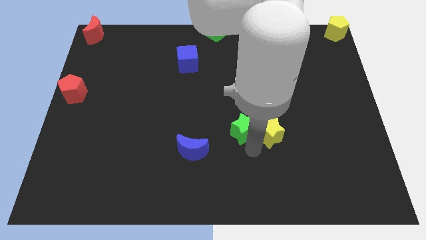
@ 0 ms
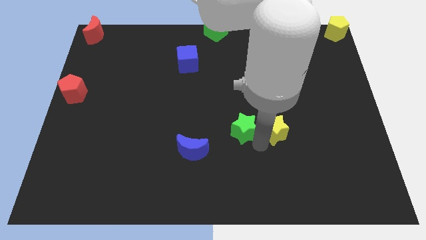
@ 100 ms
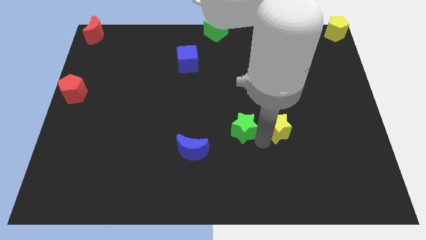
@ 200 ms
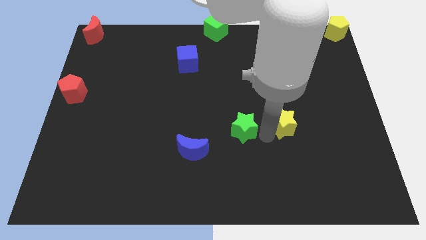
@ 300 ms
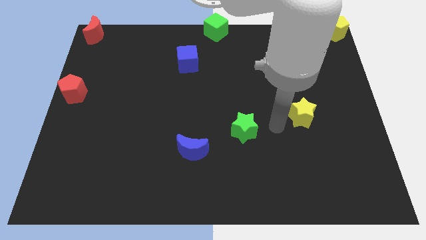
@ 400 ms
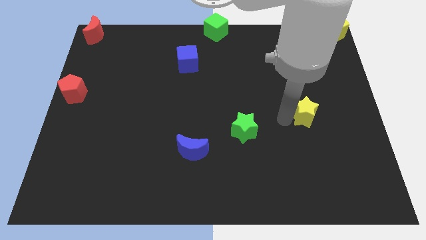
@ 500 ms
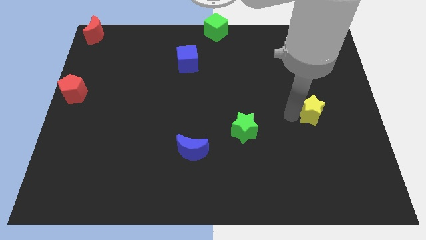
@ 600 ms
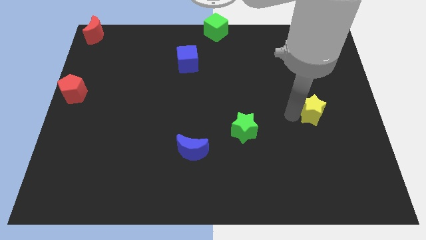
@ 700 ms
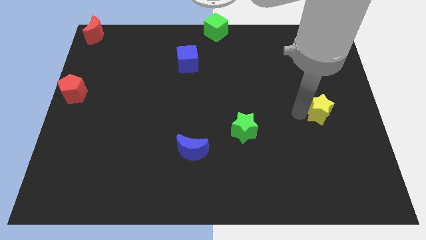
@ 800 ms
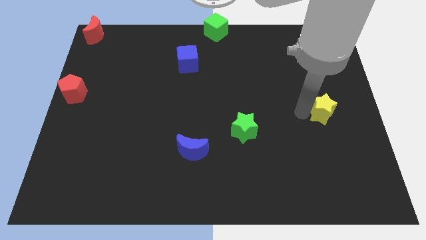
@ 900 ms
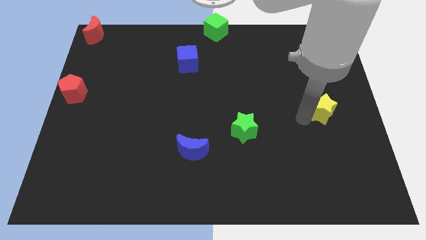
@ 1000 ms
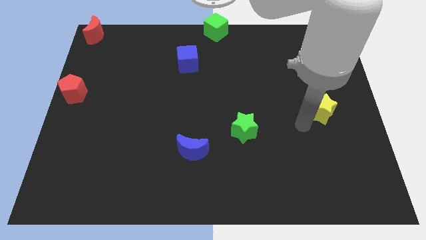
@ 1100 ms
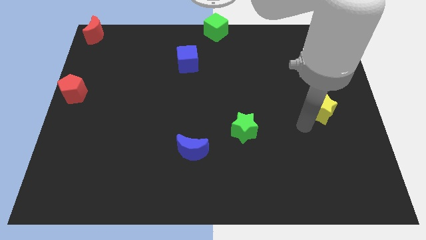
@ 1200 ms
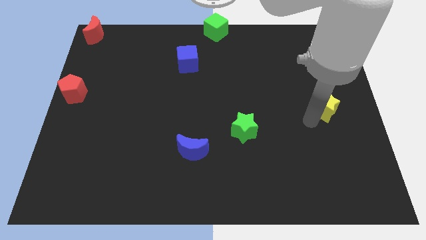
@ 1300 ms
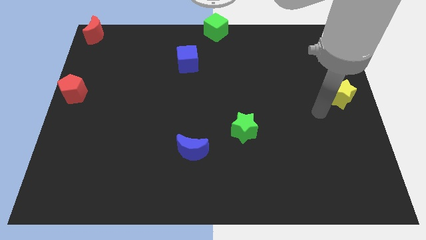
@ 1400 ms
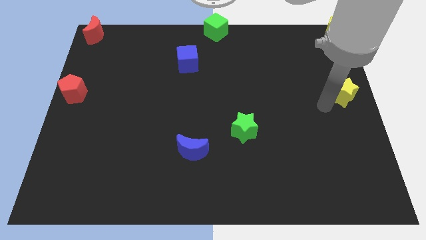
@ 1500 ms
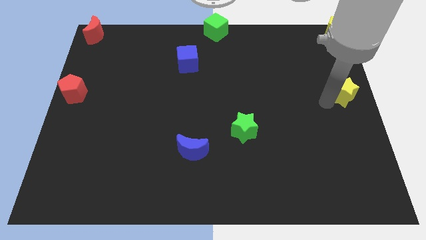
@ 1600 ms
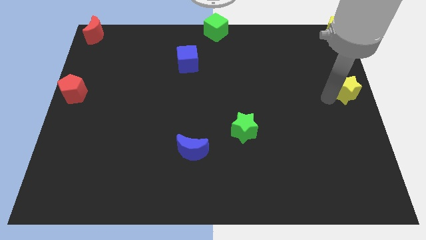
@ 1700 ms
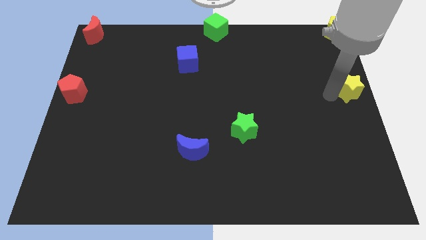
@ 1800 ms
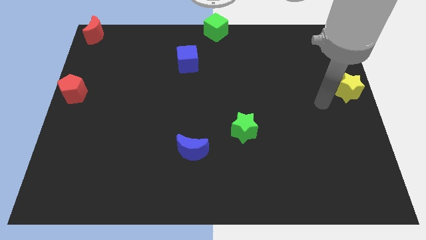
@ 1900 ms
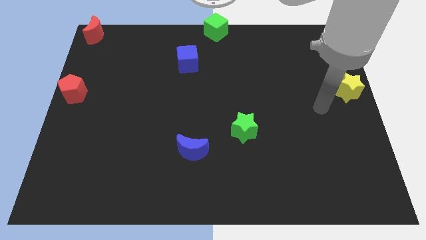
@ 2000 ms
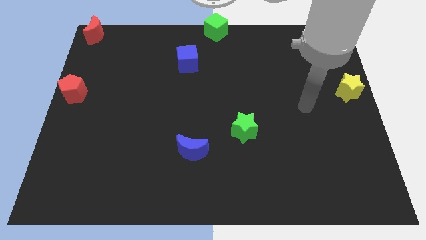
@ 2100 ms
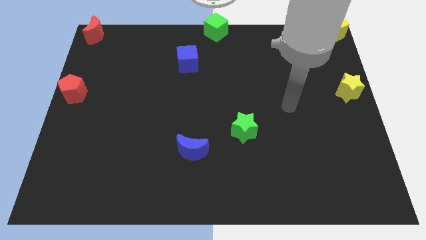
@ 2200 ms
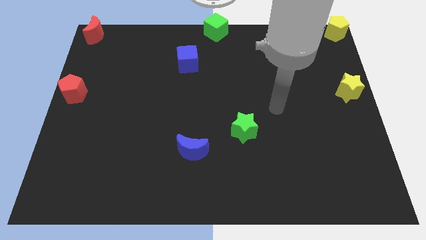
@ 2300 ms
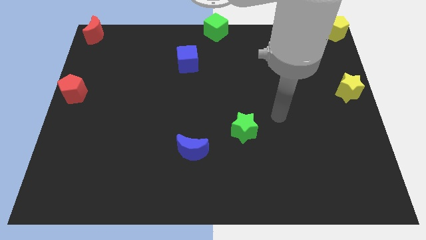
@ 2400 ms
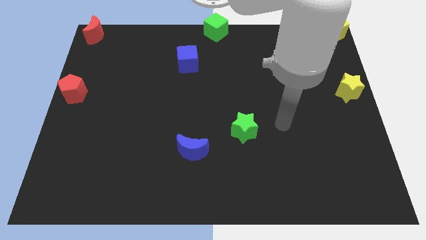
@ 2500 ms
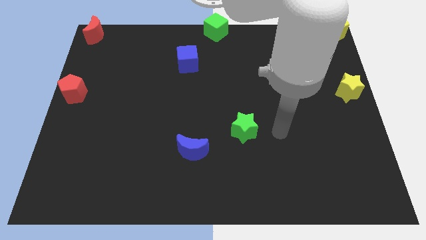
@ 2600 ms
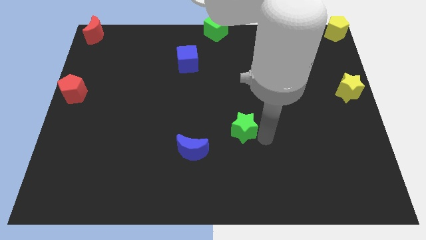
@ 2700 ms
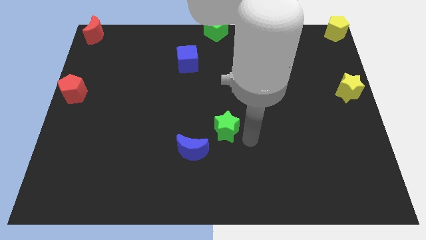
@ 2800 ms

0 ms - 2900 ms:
place the yellow star to the right center of the board

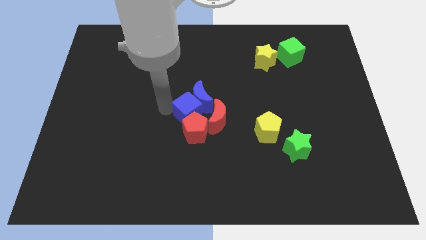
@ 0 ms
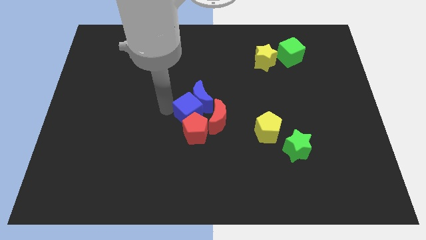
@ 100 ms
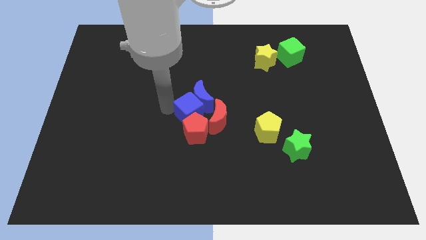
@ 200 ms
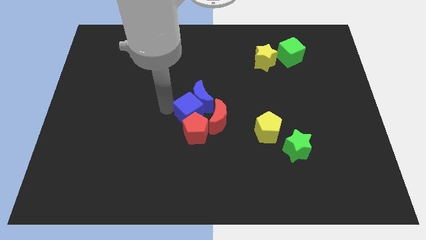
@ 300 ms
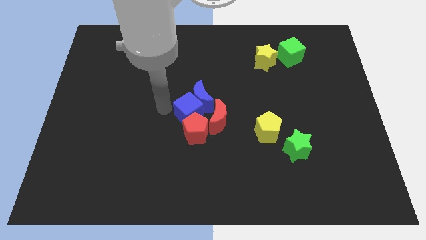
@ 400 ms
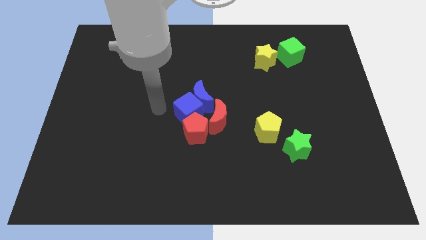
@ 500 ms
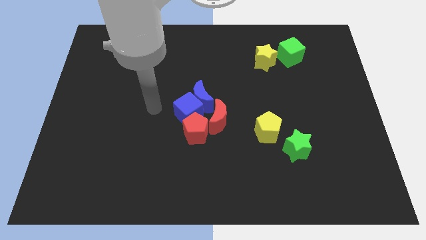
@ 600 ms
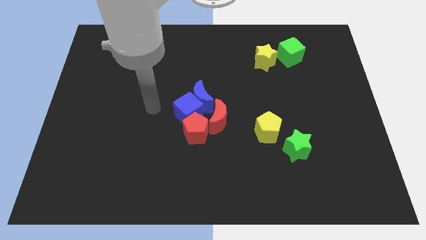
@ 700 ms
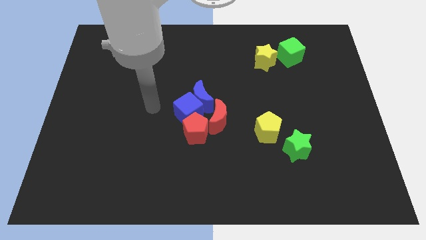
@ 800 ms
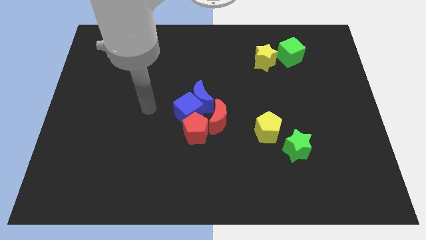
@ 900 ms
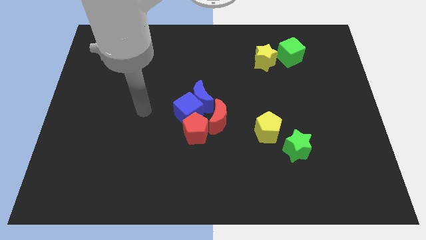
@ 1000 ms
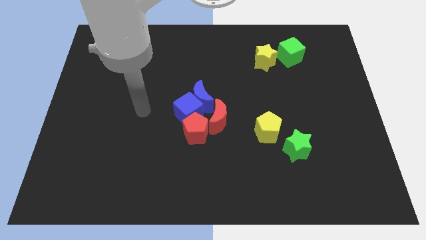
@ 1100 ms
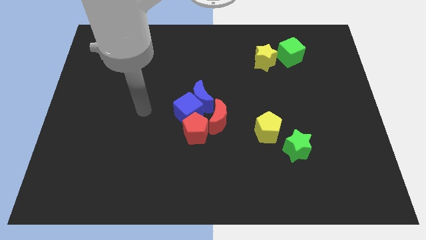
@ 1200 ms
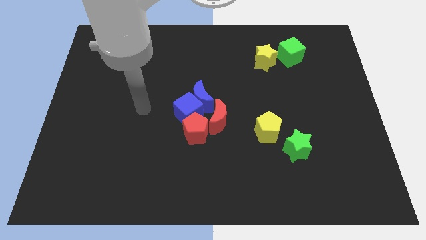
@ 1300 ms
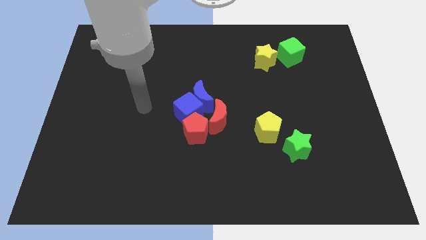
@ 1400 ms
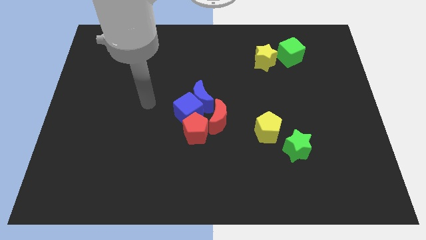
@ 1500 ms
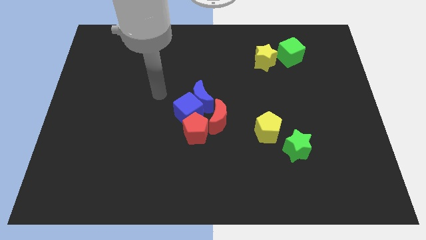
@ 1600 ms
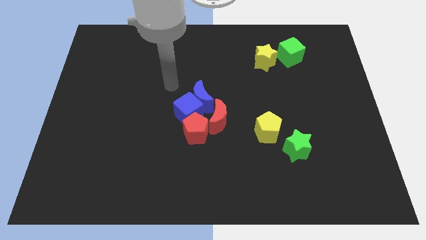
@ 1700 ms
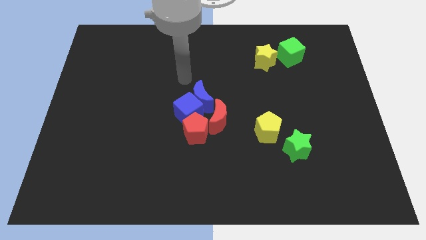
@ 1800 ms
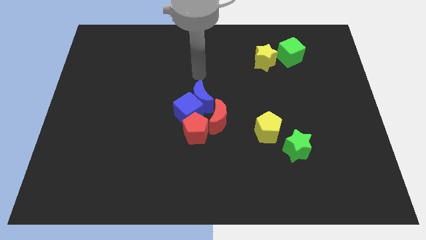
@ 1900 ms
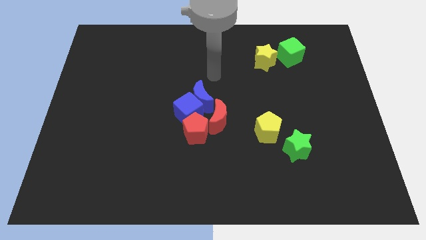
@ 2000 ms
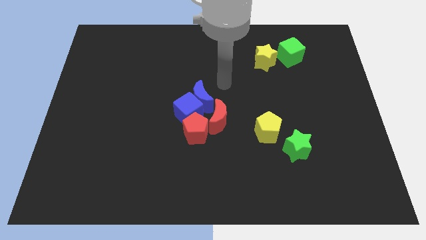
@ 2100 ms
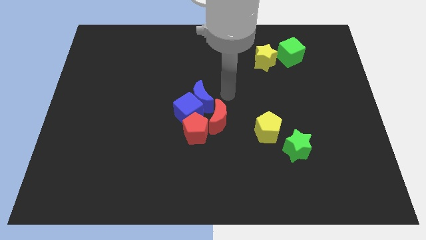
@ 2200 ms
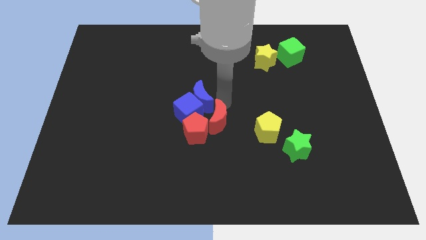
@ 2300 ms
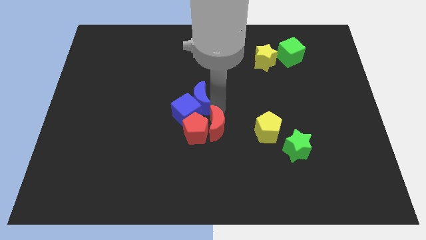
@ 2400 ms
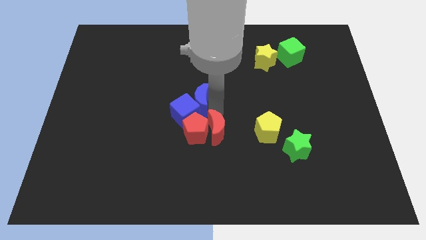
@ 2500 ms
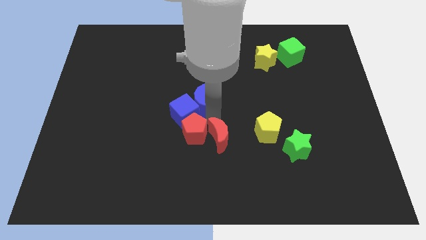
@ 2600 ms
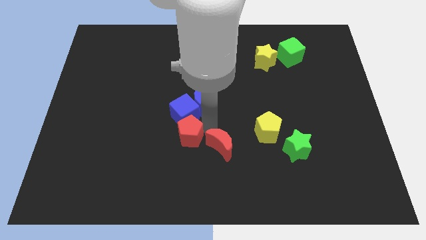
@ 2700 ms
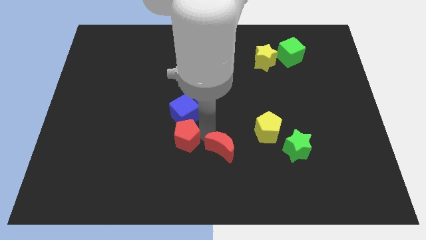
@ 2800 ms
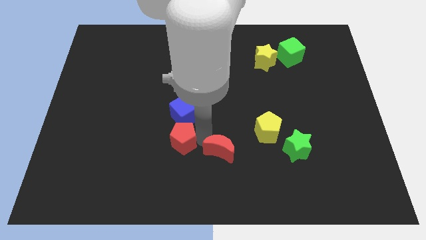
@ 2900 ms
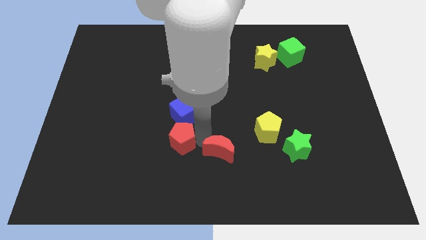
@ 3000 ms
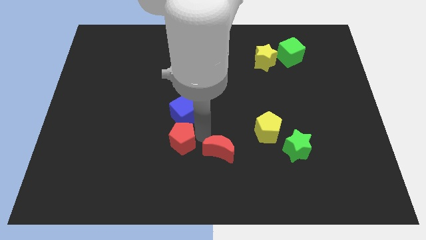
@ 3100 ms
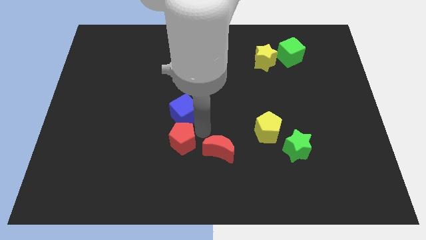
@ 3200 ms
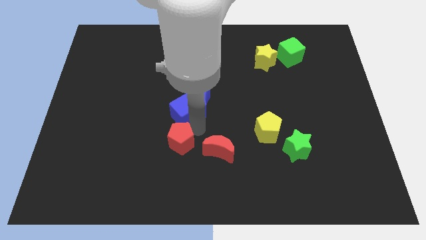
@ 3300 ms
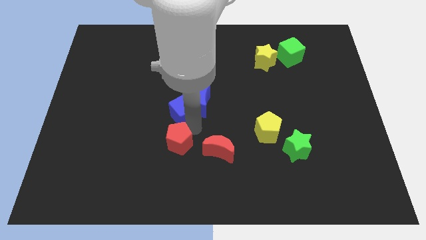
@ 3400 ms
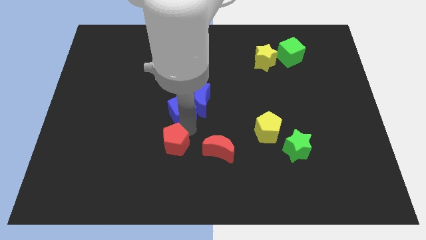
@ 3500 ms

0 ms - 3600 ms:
separate the red pentagon and red crescent

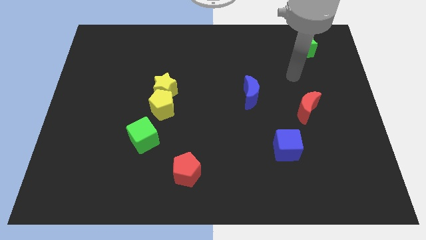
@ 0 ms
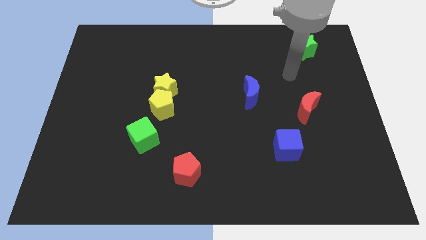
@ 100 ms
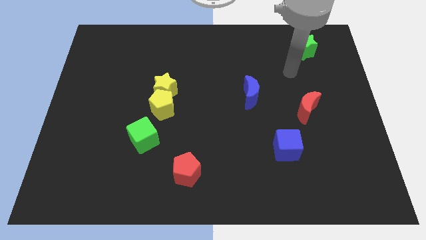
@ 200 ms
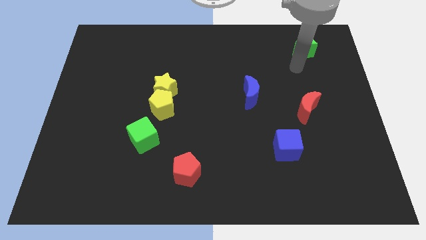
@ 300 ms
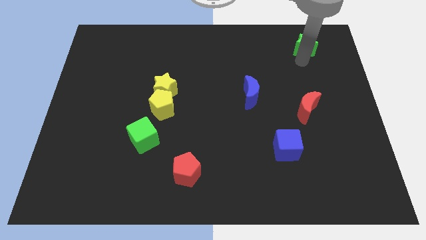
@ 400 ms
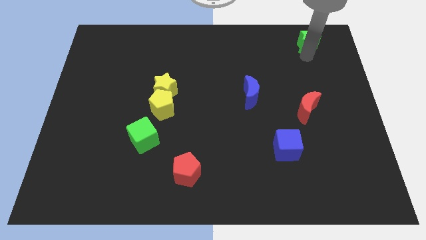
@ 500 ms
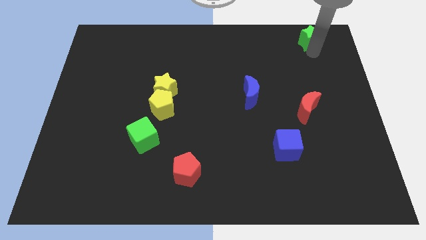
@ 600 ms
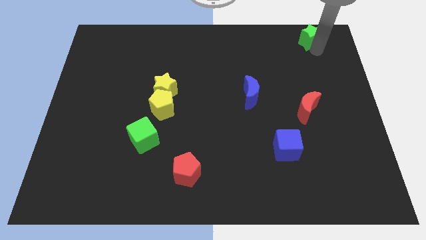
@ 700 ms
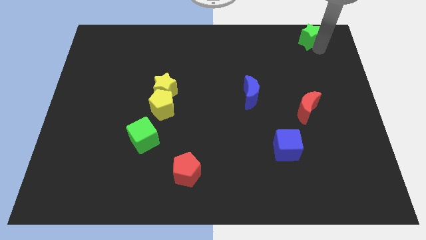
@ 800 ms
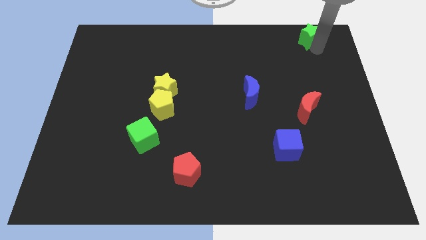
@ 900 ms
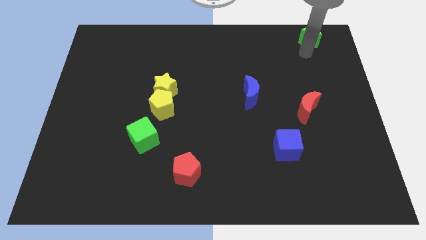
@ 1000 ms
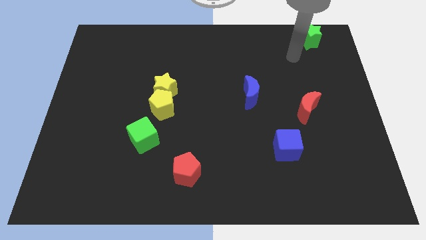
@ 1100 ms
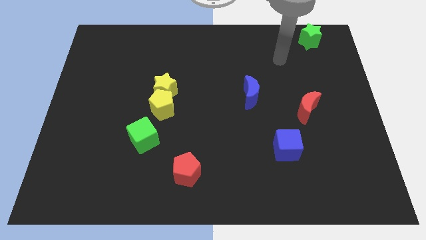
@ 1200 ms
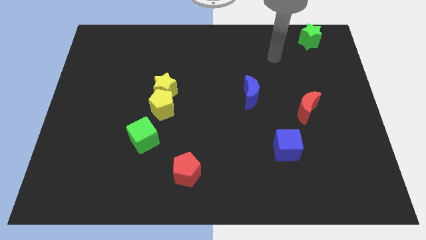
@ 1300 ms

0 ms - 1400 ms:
move the green star to the top right

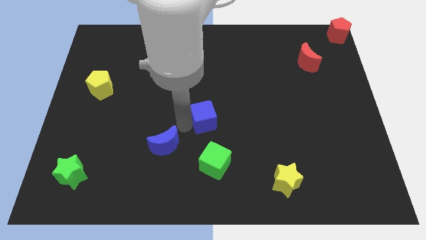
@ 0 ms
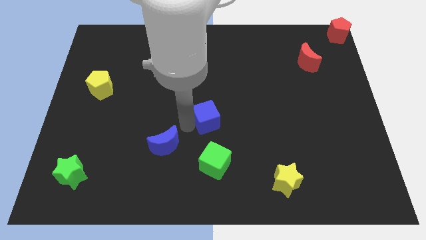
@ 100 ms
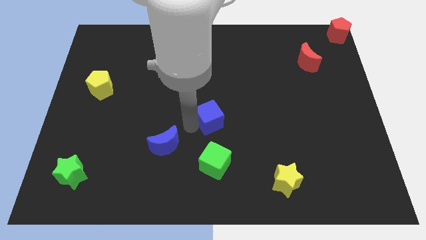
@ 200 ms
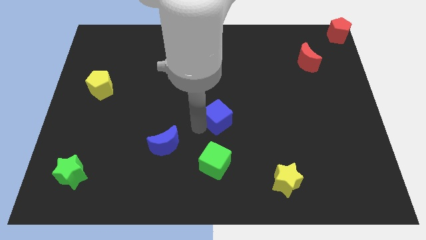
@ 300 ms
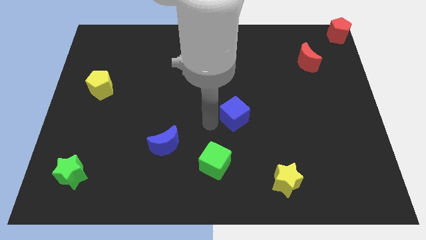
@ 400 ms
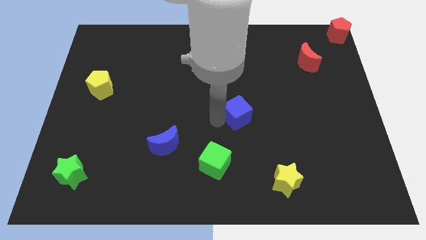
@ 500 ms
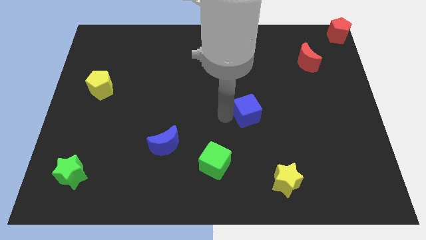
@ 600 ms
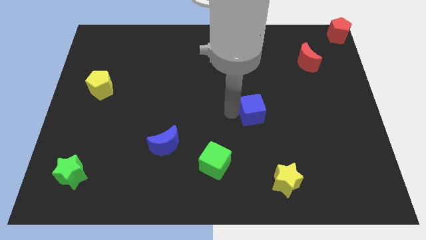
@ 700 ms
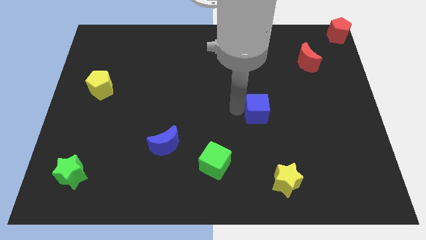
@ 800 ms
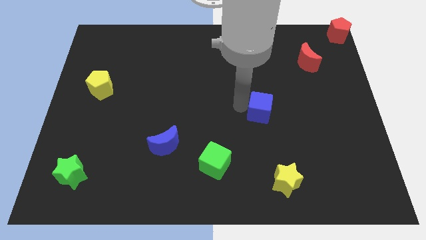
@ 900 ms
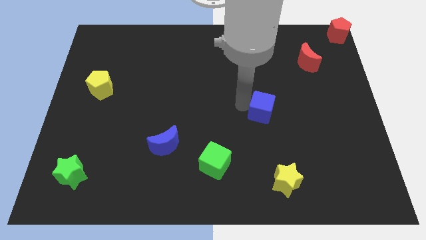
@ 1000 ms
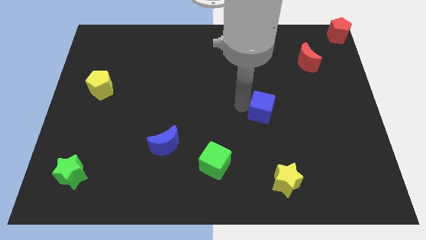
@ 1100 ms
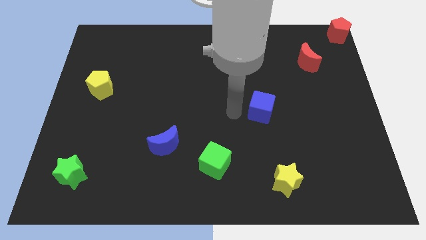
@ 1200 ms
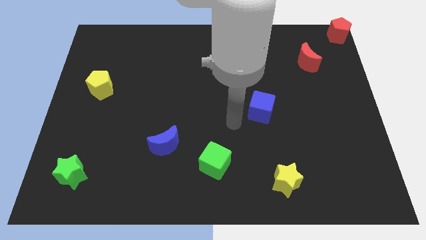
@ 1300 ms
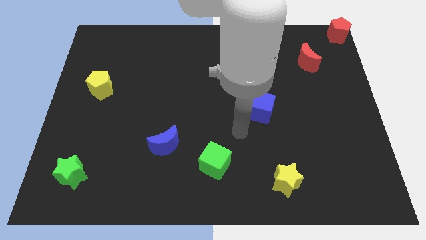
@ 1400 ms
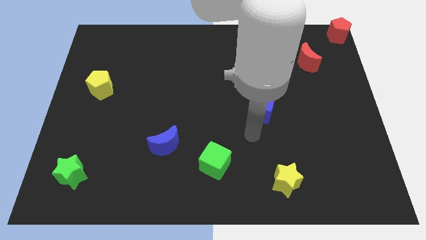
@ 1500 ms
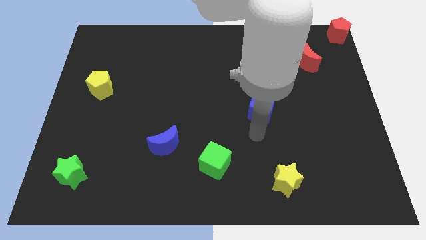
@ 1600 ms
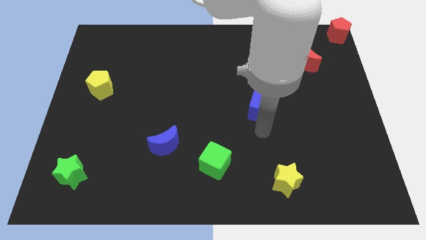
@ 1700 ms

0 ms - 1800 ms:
place the blue cube diagonally below the red crescent
